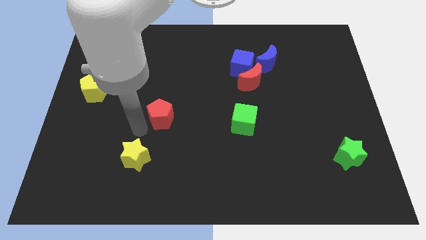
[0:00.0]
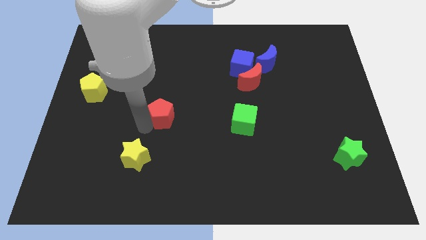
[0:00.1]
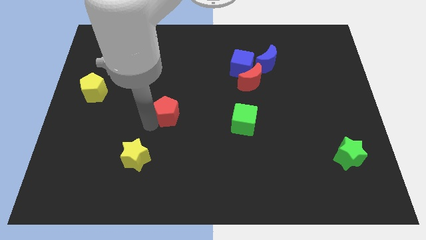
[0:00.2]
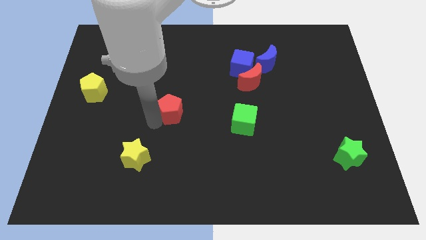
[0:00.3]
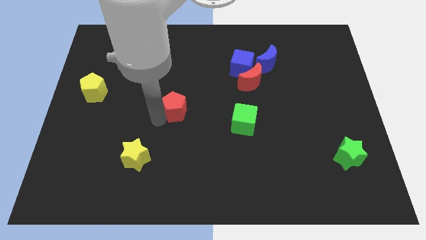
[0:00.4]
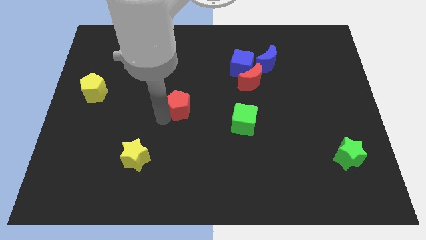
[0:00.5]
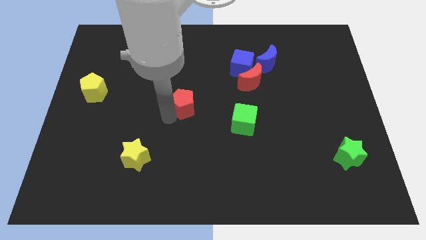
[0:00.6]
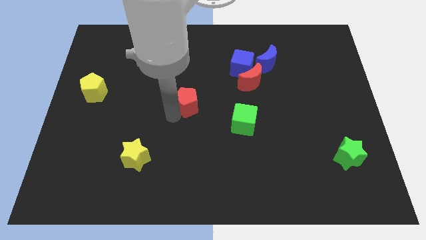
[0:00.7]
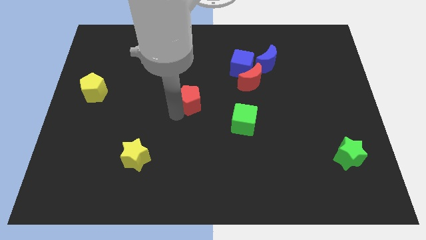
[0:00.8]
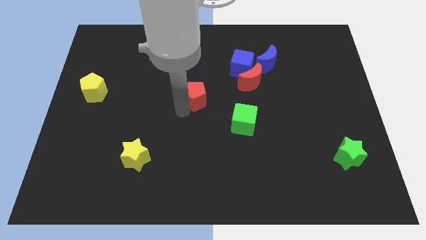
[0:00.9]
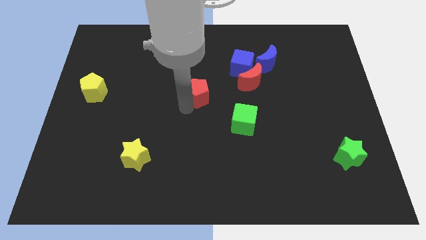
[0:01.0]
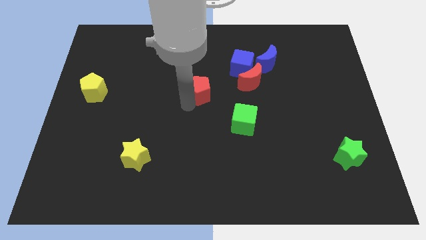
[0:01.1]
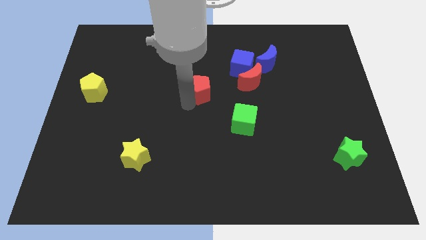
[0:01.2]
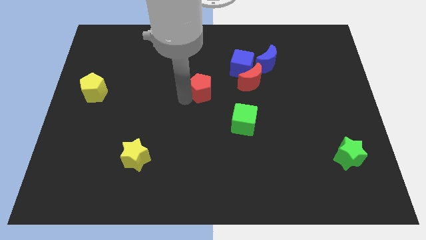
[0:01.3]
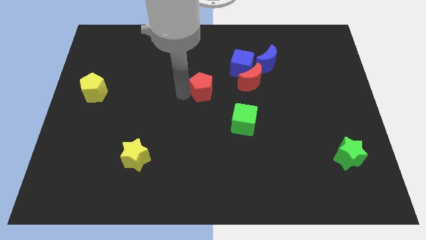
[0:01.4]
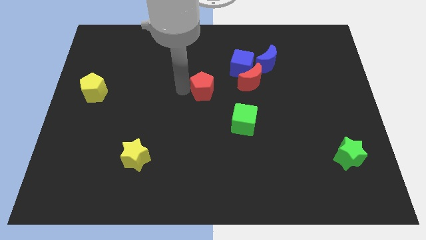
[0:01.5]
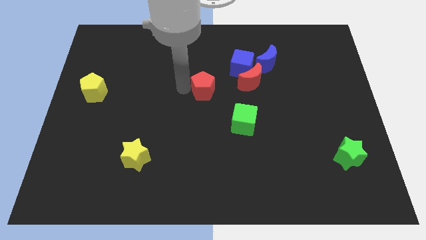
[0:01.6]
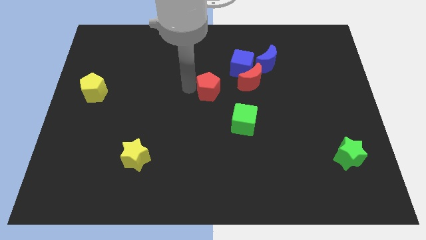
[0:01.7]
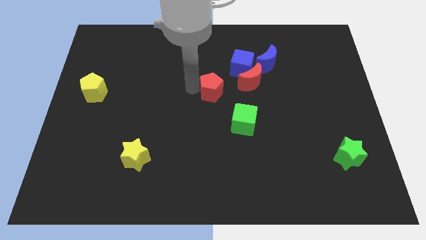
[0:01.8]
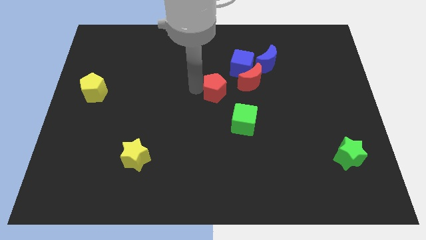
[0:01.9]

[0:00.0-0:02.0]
move red pentagon close to the red moon

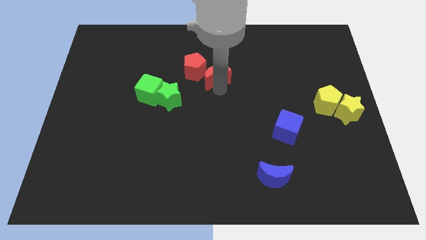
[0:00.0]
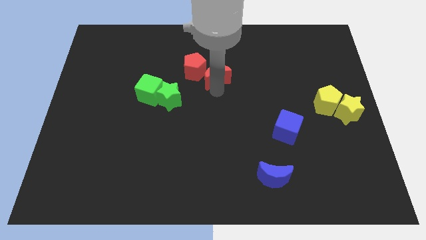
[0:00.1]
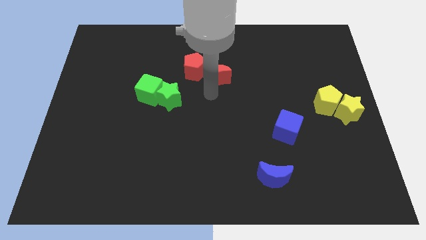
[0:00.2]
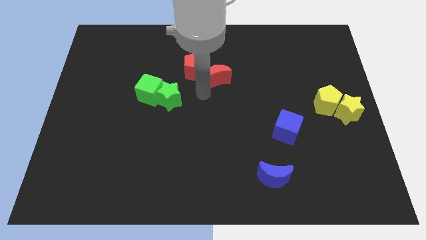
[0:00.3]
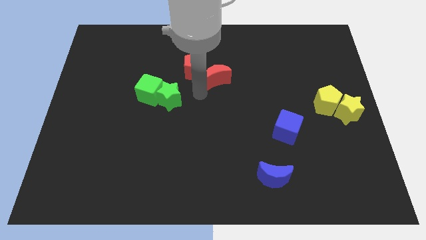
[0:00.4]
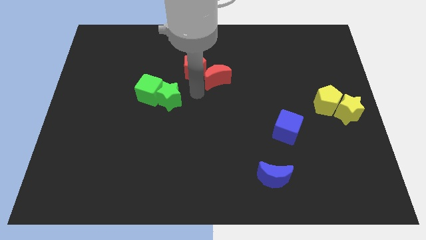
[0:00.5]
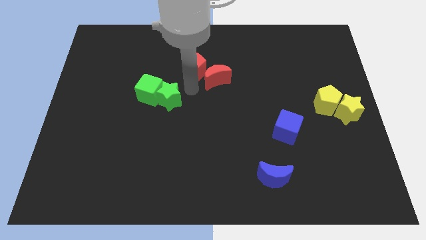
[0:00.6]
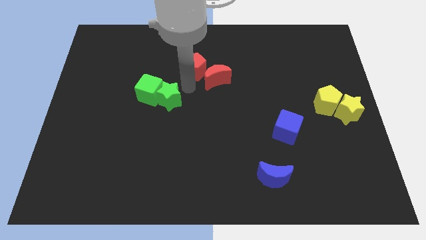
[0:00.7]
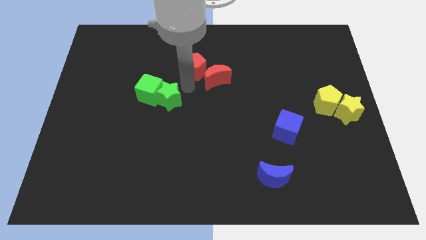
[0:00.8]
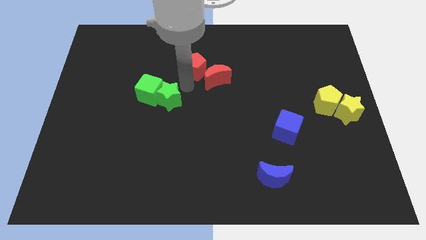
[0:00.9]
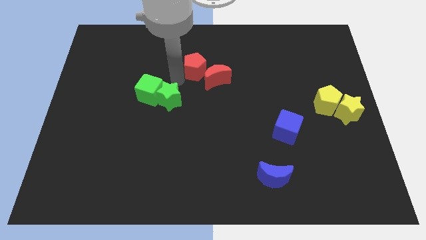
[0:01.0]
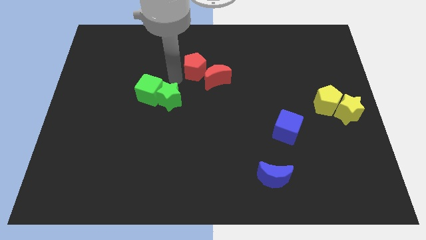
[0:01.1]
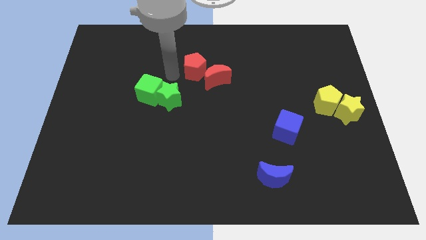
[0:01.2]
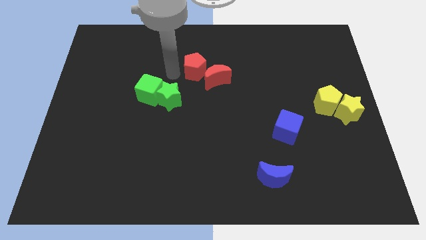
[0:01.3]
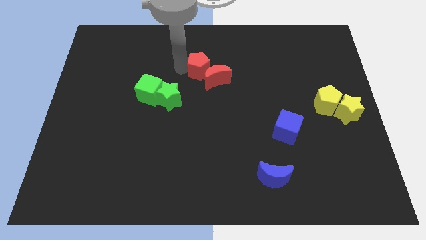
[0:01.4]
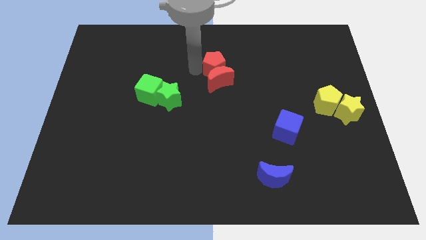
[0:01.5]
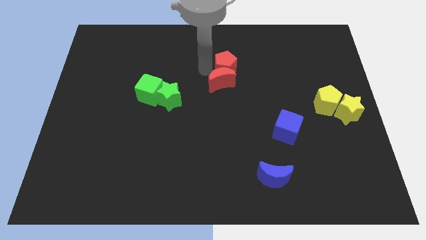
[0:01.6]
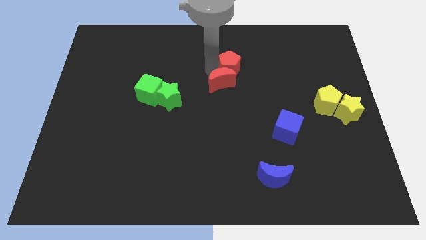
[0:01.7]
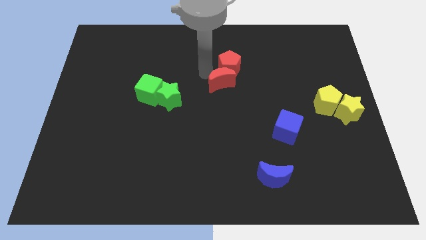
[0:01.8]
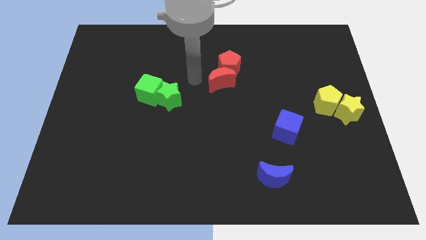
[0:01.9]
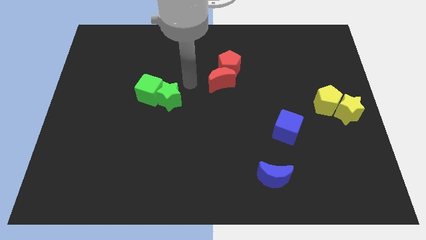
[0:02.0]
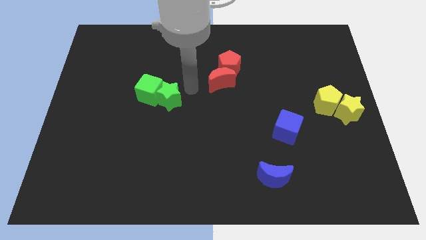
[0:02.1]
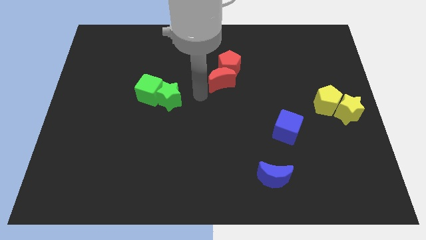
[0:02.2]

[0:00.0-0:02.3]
adjust the group of red blocks diagonally to the group of yellow blocks

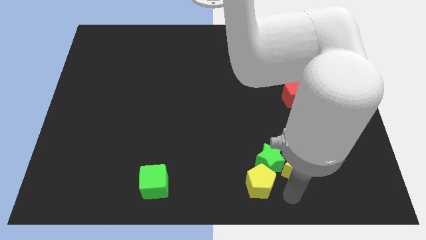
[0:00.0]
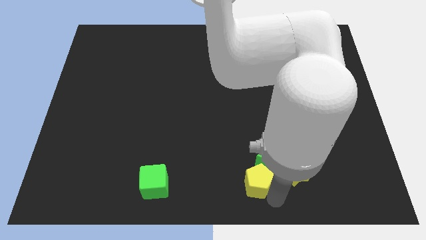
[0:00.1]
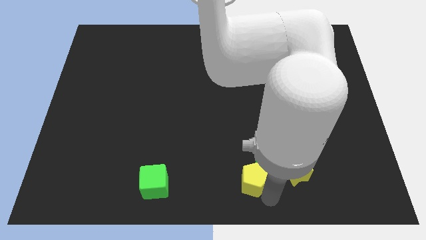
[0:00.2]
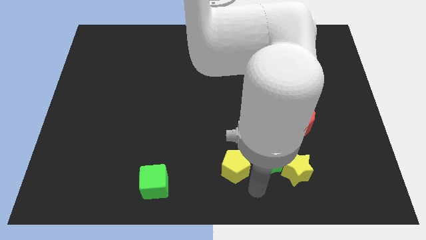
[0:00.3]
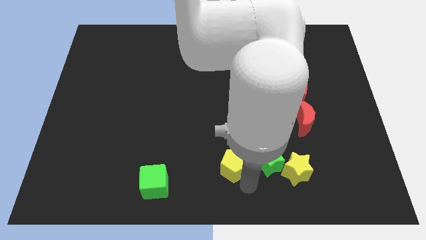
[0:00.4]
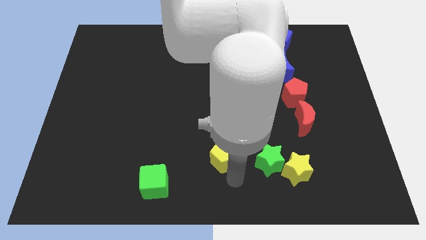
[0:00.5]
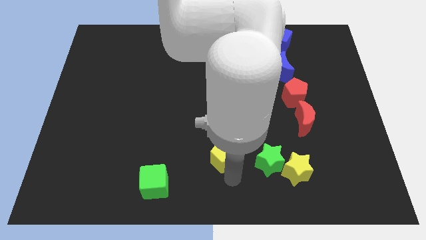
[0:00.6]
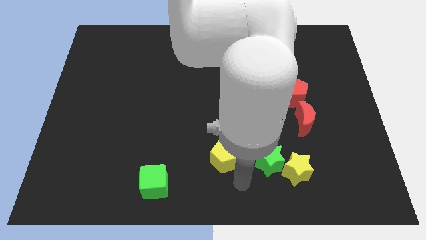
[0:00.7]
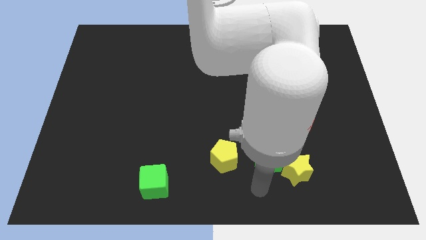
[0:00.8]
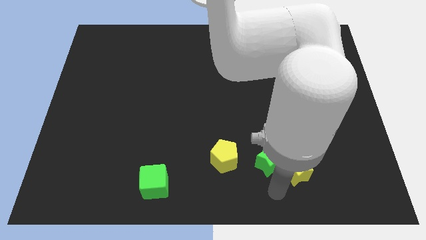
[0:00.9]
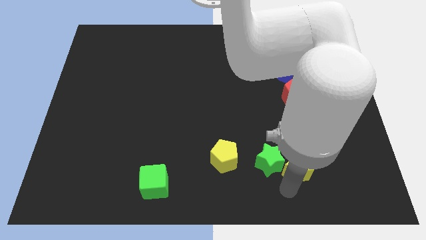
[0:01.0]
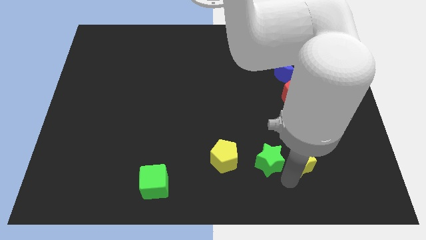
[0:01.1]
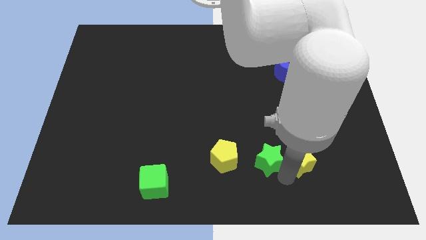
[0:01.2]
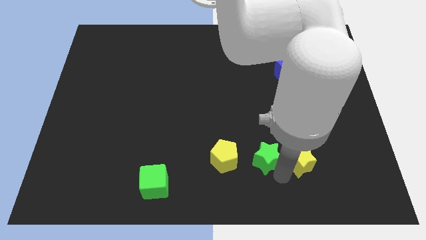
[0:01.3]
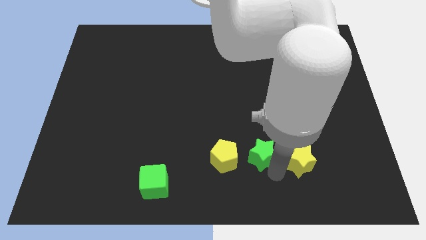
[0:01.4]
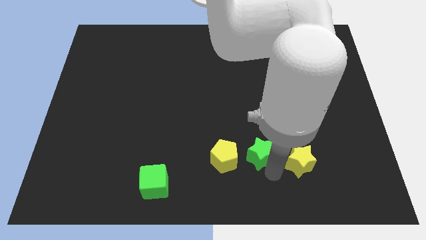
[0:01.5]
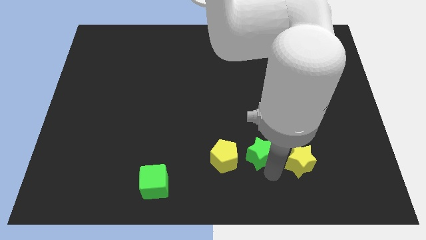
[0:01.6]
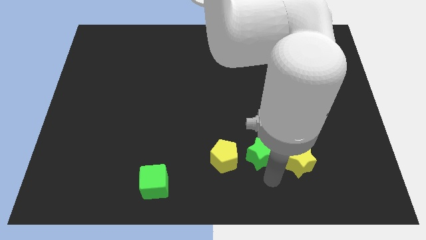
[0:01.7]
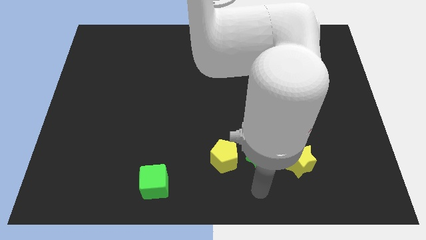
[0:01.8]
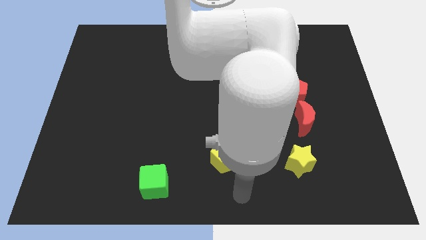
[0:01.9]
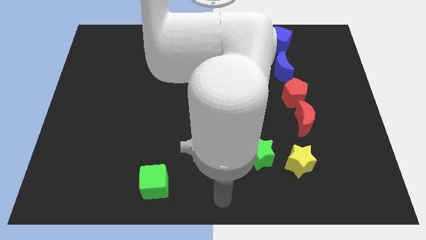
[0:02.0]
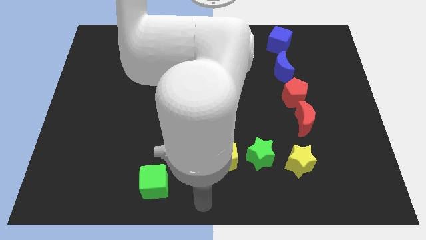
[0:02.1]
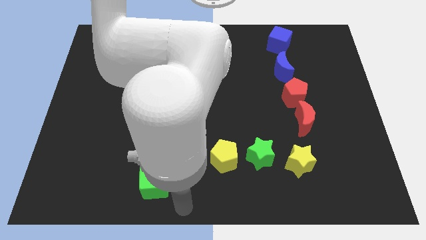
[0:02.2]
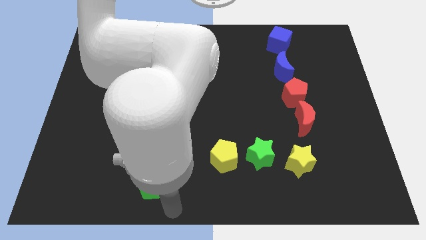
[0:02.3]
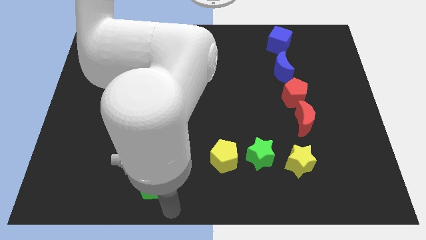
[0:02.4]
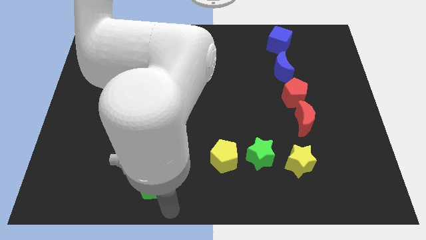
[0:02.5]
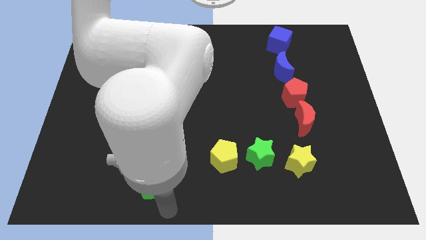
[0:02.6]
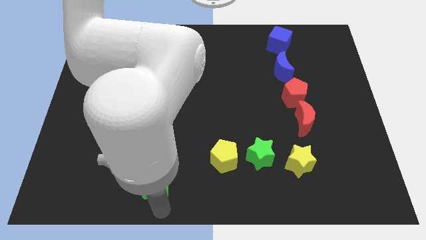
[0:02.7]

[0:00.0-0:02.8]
arrange the yellow pentagon and green star in a horizontal line with the yellow star

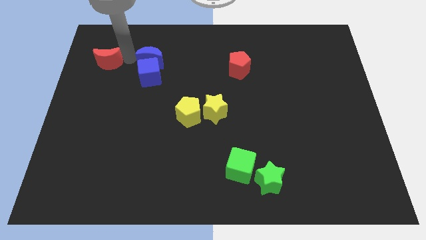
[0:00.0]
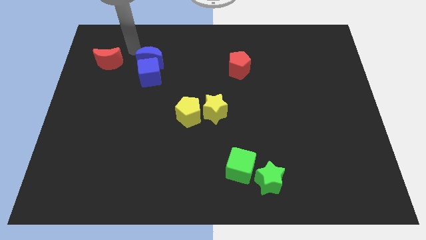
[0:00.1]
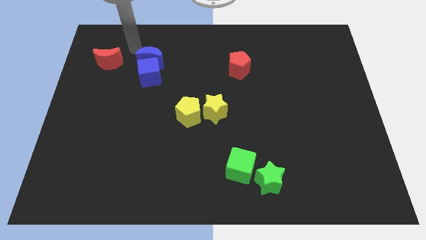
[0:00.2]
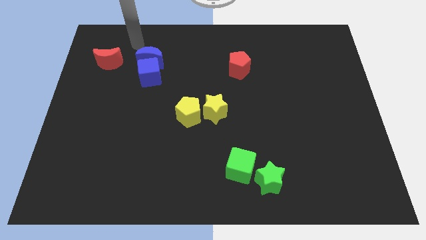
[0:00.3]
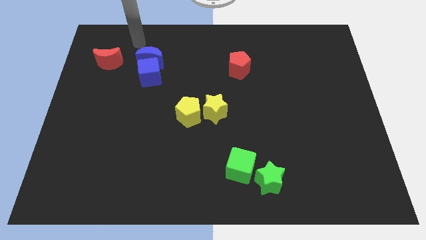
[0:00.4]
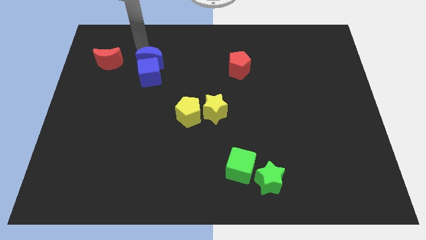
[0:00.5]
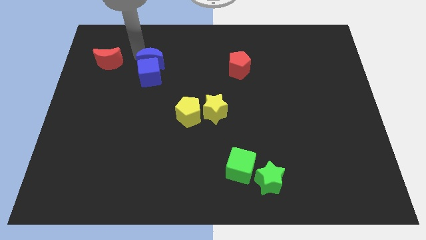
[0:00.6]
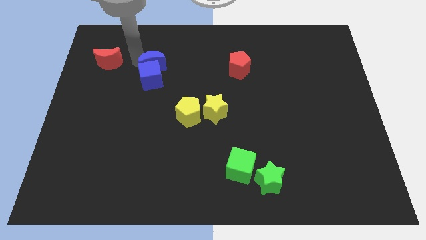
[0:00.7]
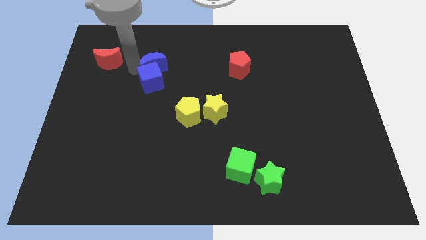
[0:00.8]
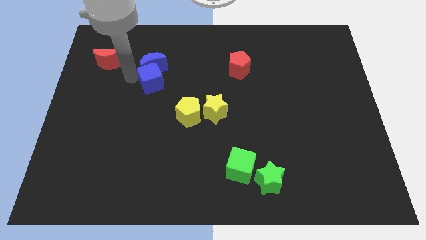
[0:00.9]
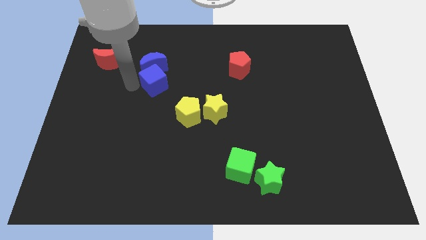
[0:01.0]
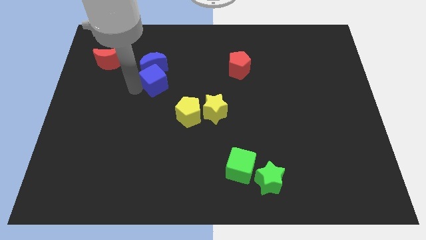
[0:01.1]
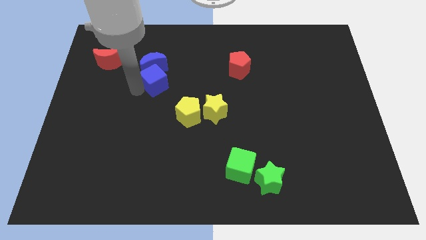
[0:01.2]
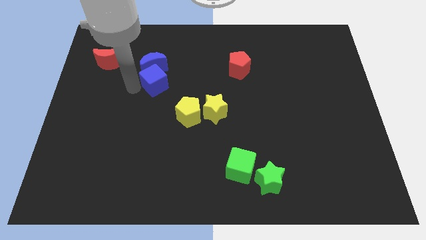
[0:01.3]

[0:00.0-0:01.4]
push the blue crescent into the blue cube

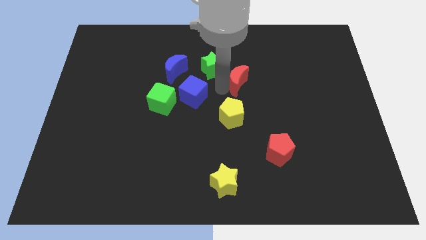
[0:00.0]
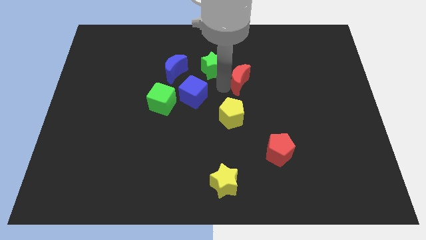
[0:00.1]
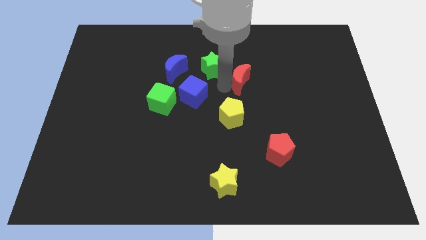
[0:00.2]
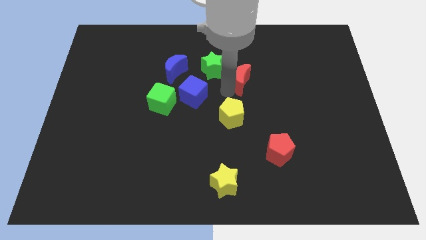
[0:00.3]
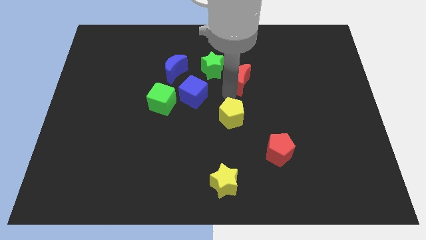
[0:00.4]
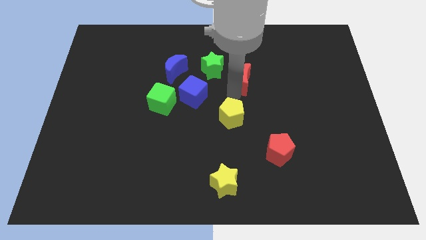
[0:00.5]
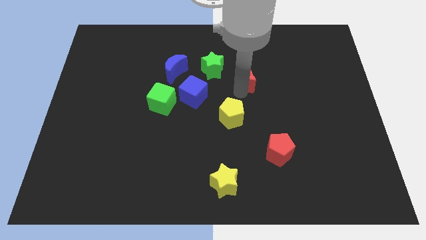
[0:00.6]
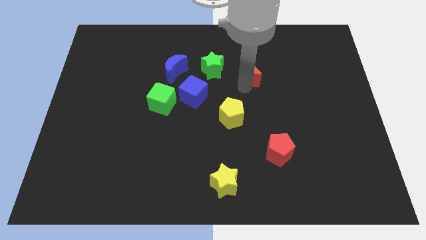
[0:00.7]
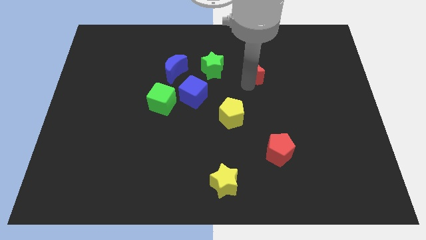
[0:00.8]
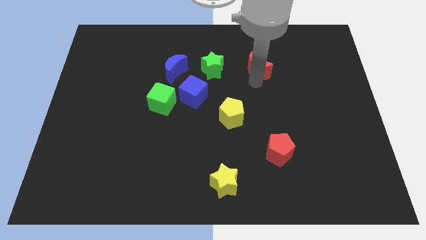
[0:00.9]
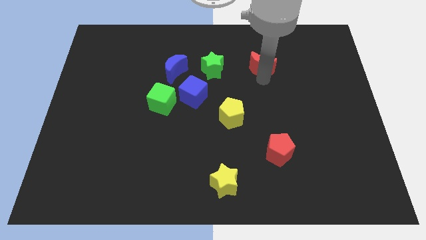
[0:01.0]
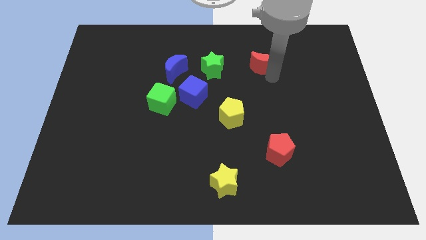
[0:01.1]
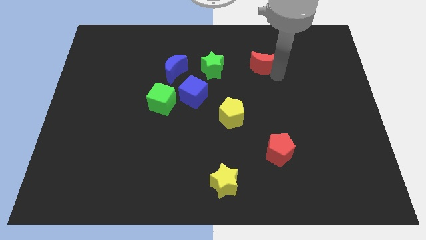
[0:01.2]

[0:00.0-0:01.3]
push the red crescent to the right of the green star
